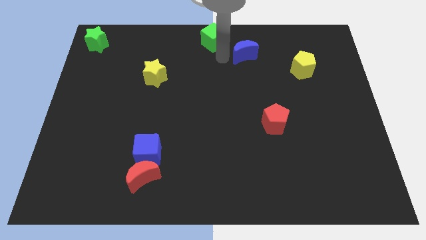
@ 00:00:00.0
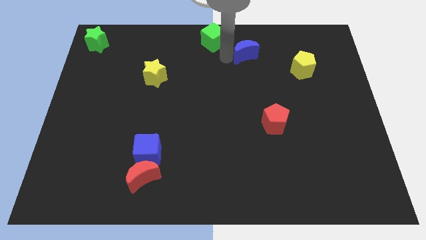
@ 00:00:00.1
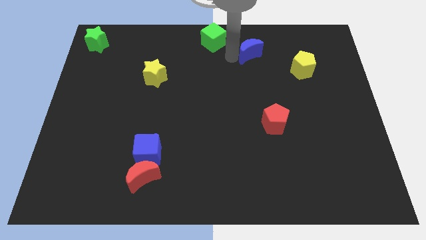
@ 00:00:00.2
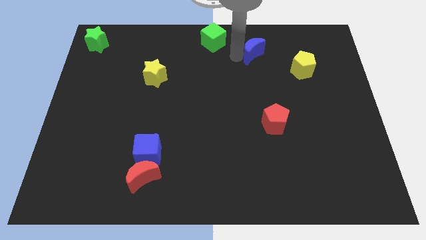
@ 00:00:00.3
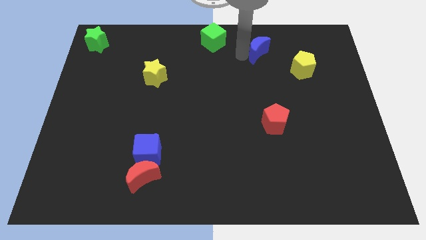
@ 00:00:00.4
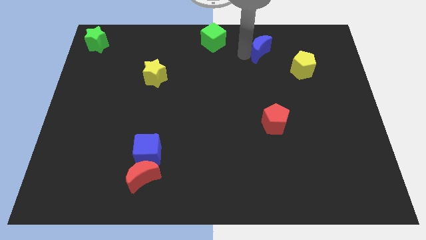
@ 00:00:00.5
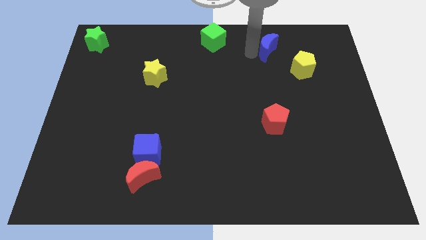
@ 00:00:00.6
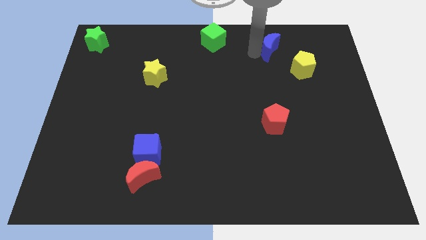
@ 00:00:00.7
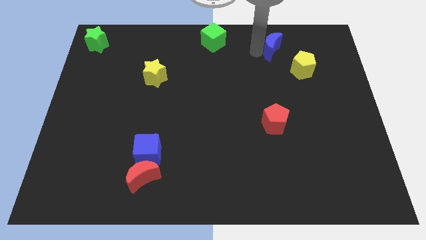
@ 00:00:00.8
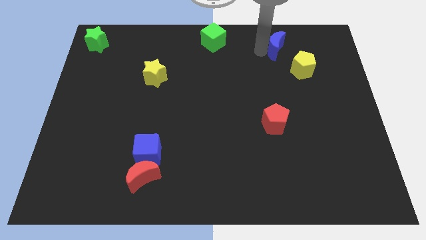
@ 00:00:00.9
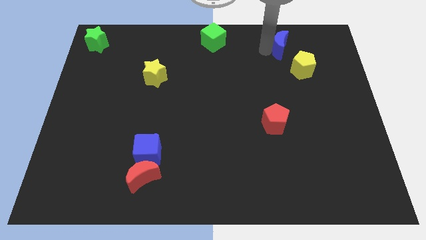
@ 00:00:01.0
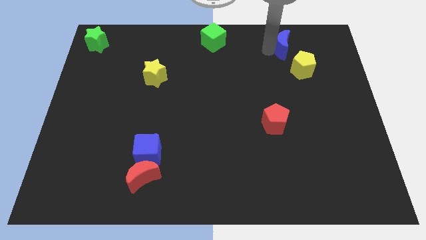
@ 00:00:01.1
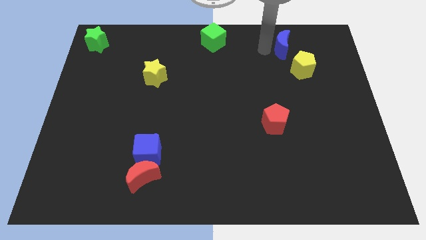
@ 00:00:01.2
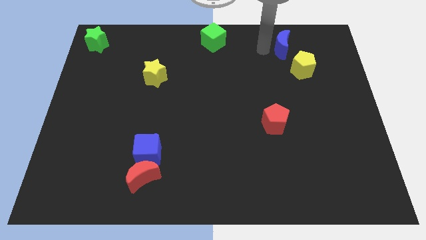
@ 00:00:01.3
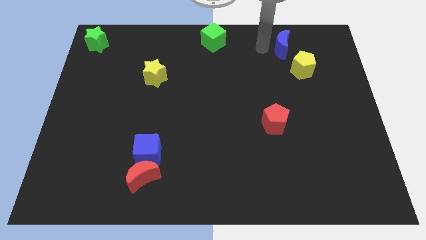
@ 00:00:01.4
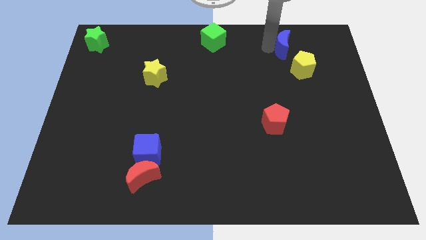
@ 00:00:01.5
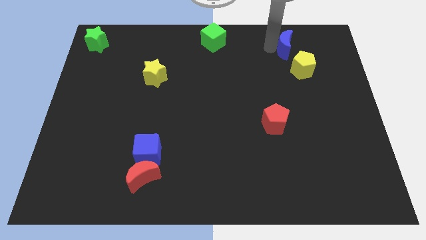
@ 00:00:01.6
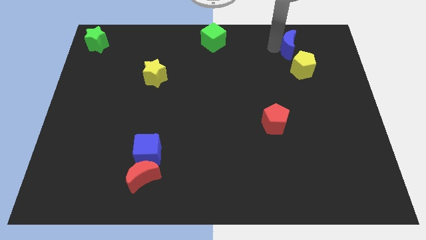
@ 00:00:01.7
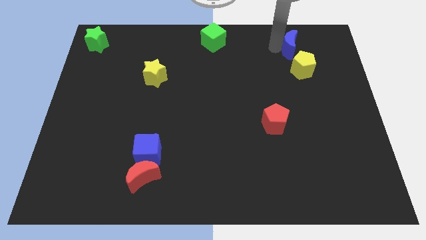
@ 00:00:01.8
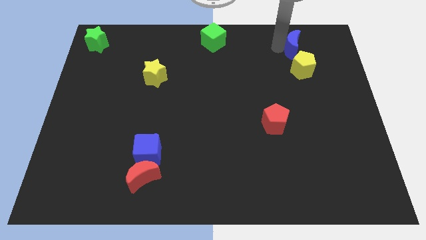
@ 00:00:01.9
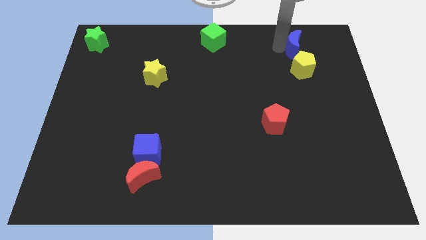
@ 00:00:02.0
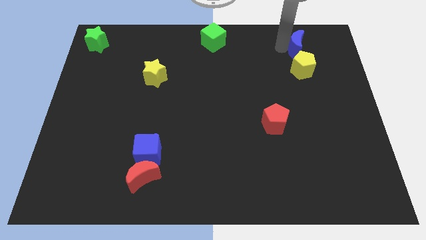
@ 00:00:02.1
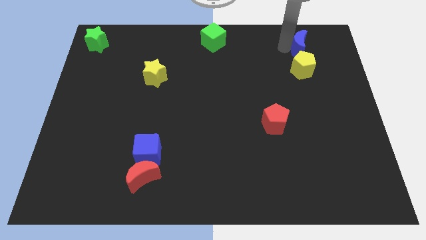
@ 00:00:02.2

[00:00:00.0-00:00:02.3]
slide the blue moon on the top of yellow pentagon

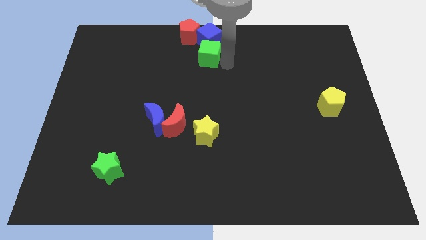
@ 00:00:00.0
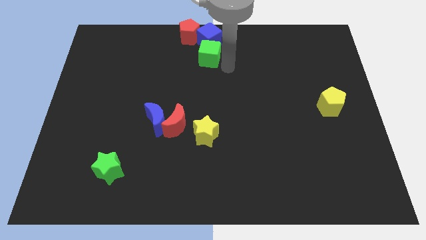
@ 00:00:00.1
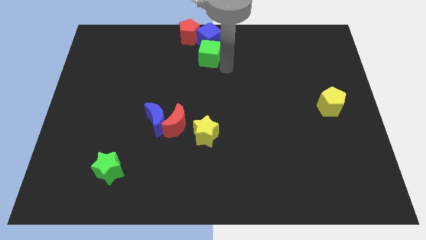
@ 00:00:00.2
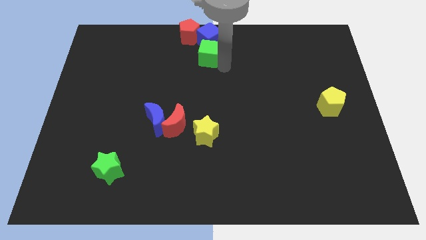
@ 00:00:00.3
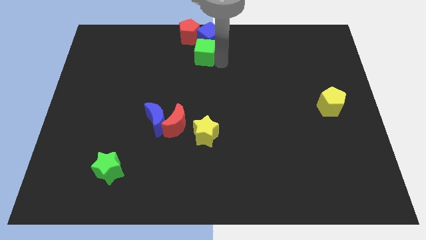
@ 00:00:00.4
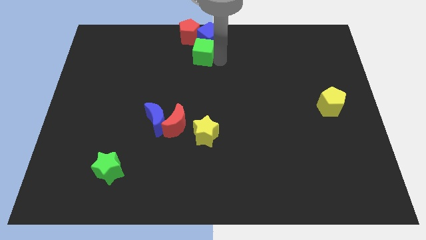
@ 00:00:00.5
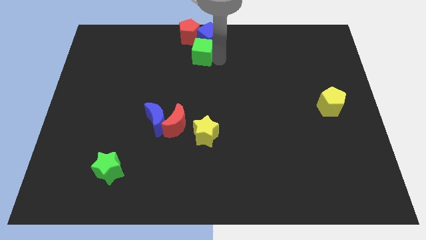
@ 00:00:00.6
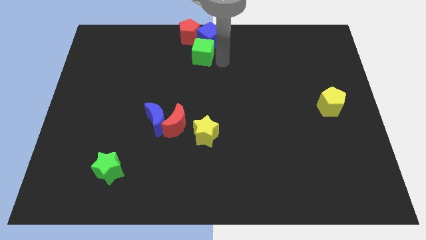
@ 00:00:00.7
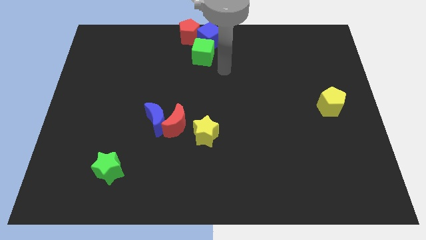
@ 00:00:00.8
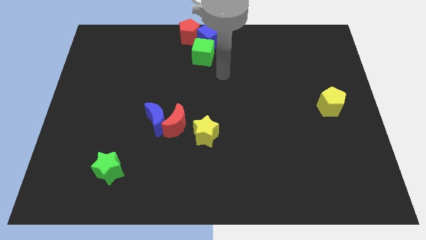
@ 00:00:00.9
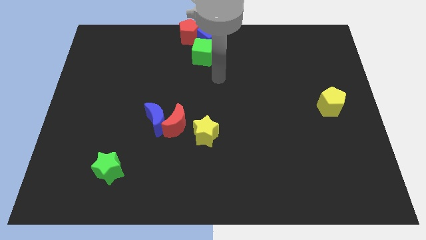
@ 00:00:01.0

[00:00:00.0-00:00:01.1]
adjust green cube below blue cube

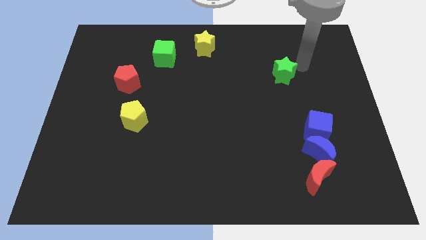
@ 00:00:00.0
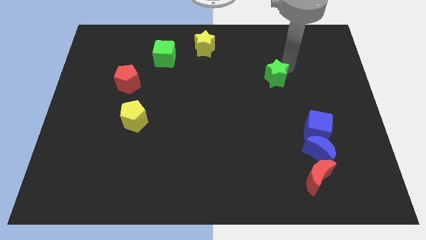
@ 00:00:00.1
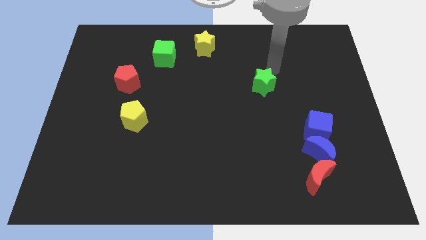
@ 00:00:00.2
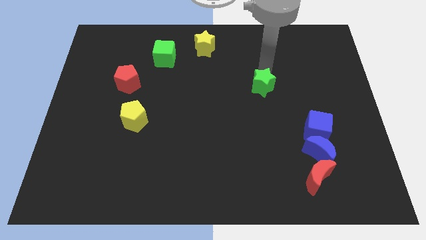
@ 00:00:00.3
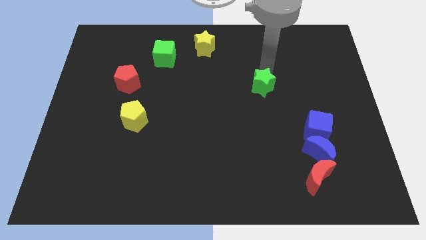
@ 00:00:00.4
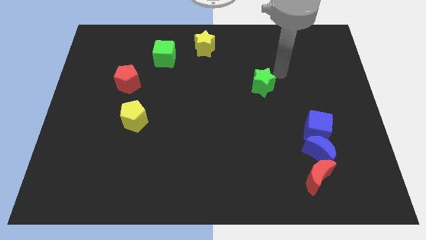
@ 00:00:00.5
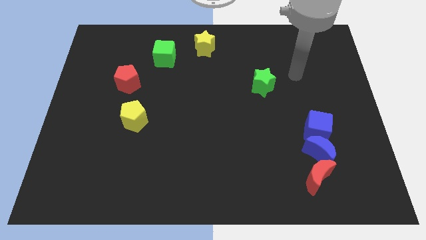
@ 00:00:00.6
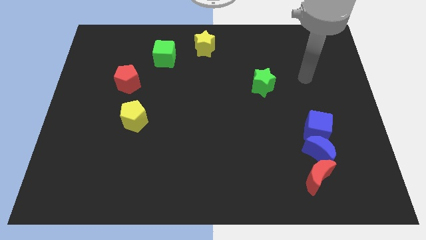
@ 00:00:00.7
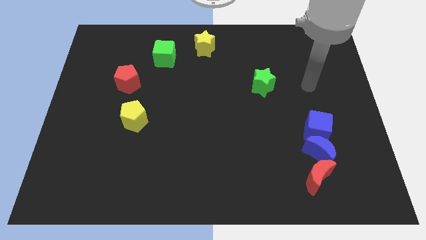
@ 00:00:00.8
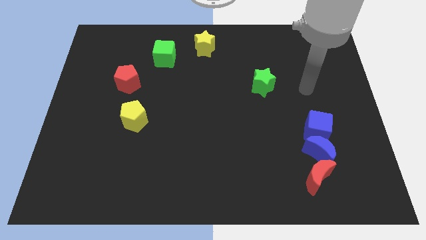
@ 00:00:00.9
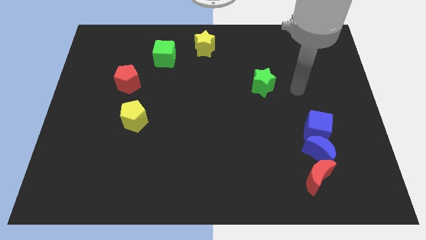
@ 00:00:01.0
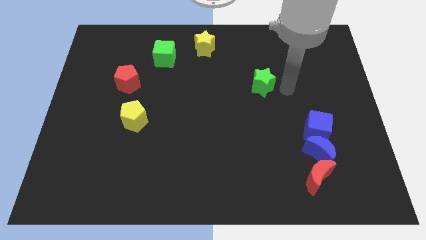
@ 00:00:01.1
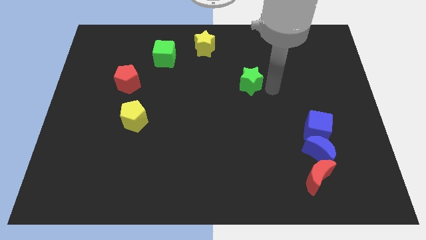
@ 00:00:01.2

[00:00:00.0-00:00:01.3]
place the green star diagonally top right to yellow pentagon

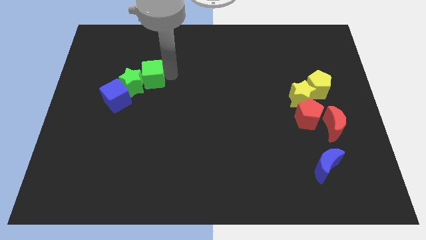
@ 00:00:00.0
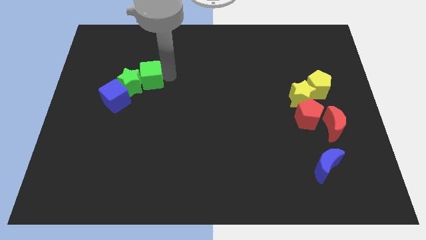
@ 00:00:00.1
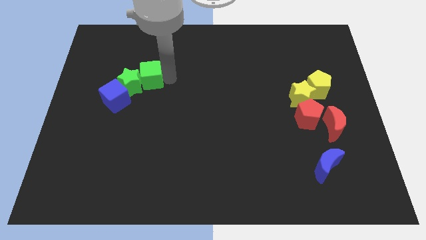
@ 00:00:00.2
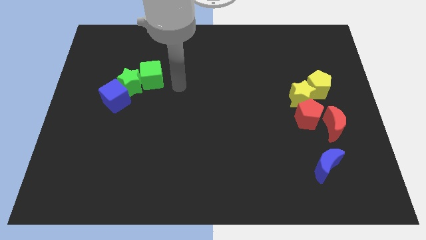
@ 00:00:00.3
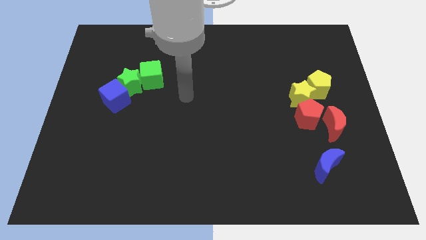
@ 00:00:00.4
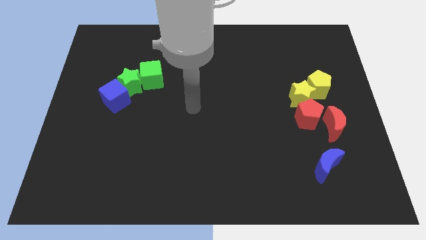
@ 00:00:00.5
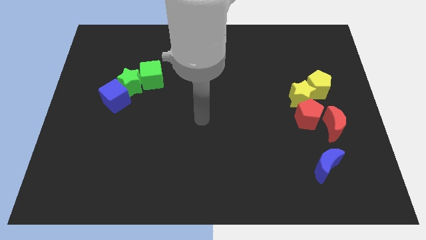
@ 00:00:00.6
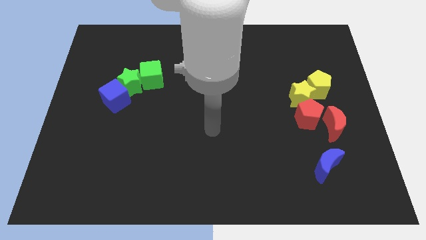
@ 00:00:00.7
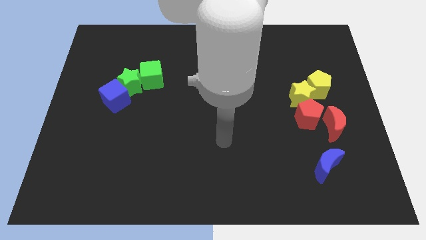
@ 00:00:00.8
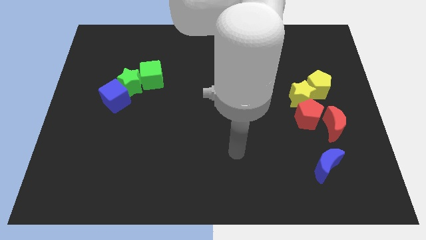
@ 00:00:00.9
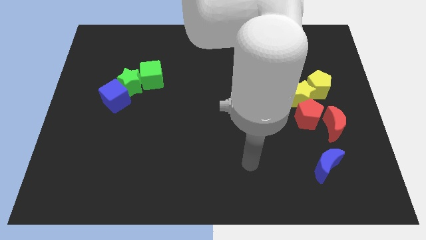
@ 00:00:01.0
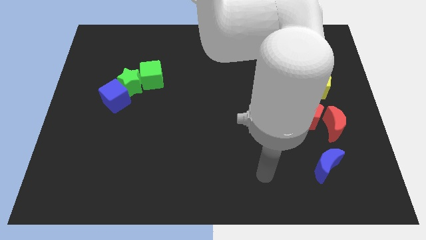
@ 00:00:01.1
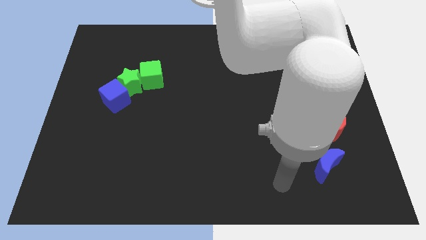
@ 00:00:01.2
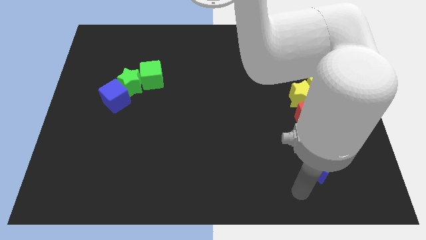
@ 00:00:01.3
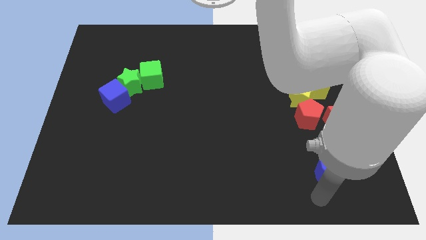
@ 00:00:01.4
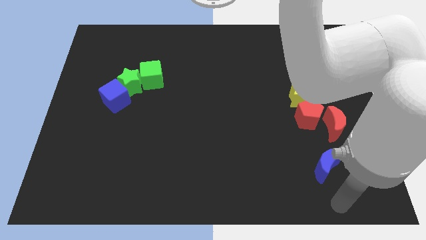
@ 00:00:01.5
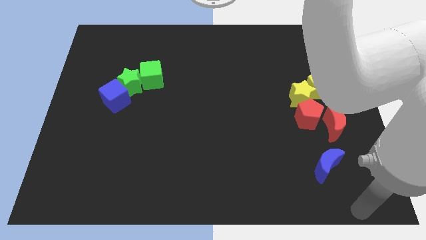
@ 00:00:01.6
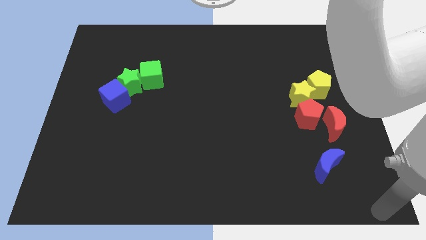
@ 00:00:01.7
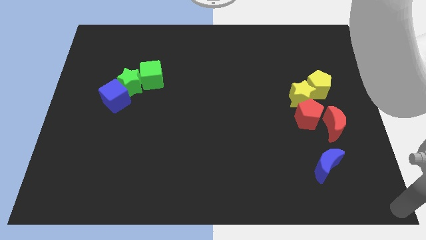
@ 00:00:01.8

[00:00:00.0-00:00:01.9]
move the arm away from the green cube

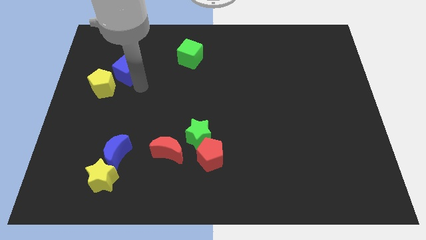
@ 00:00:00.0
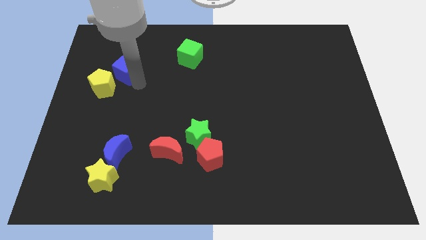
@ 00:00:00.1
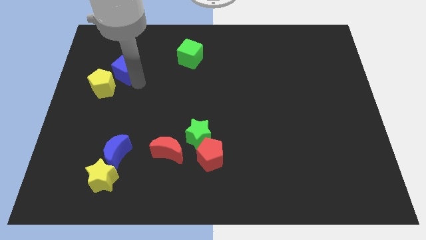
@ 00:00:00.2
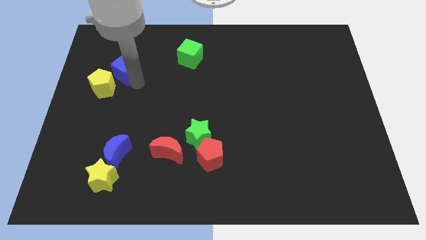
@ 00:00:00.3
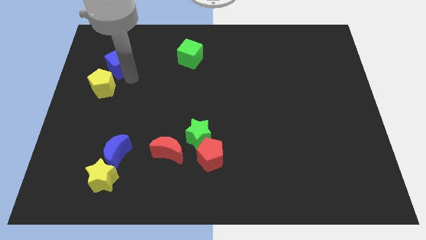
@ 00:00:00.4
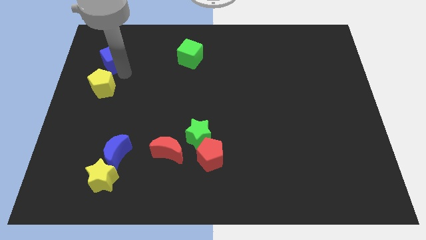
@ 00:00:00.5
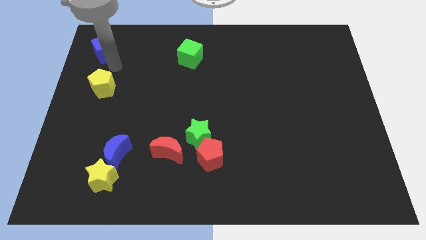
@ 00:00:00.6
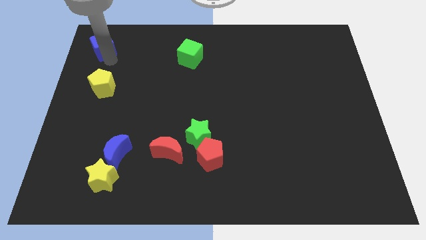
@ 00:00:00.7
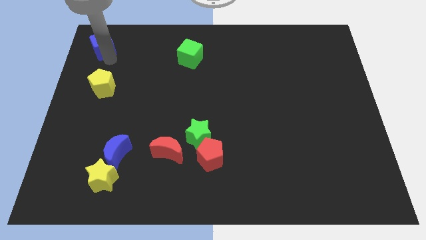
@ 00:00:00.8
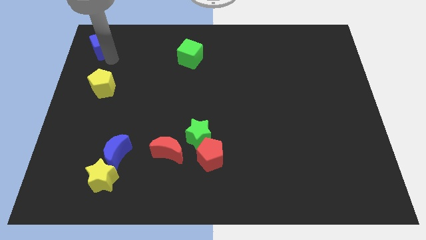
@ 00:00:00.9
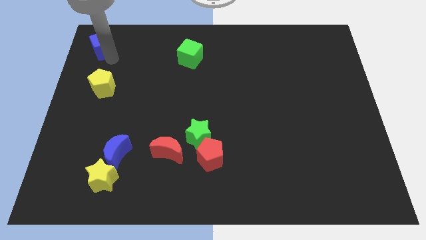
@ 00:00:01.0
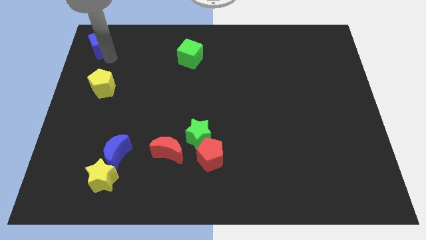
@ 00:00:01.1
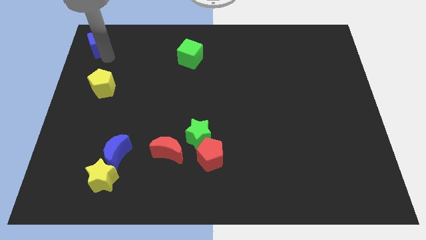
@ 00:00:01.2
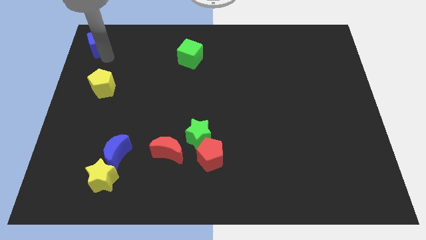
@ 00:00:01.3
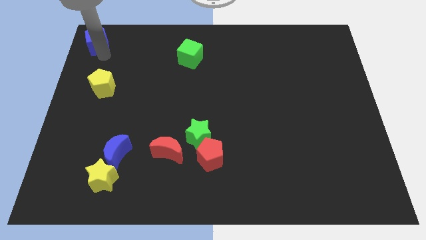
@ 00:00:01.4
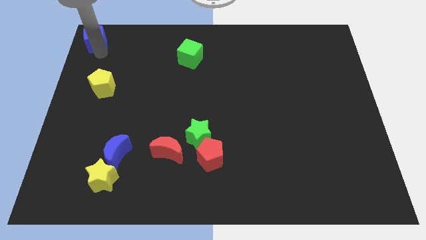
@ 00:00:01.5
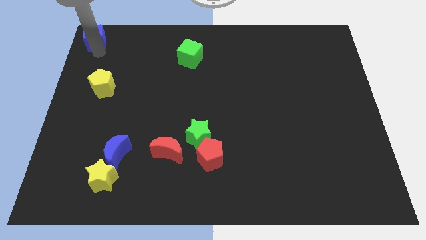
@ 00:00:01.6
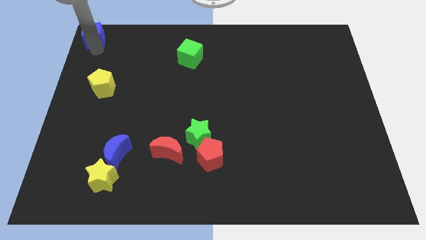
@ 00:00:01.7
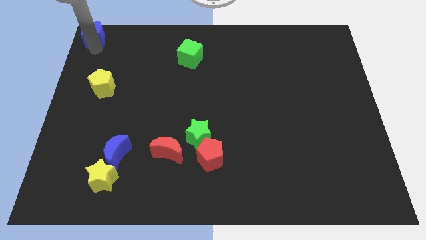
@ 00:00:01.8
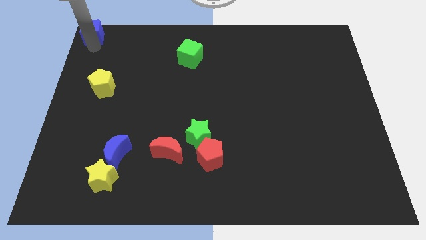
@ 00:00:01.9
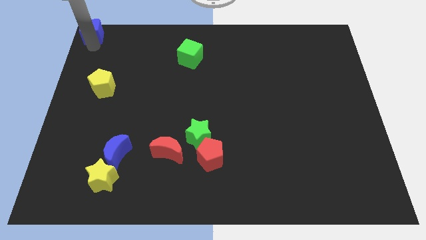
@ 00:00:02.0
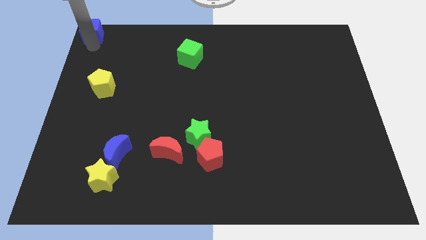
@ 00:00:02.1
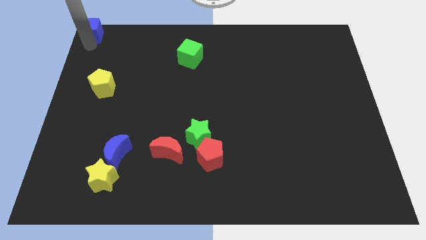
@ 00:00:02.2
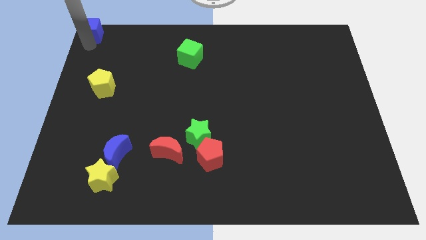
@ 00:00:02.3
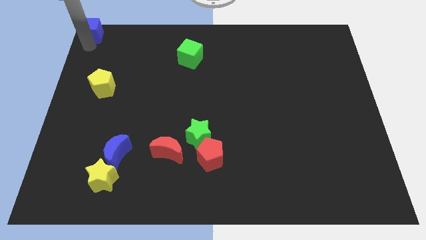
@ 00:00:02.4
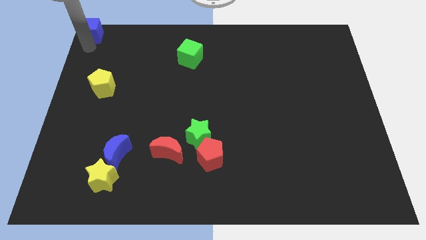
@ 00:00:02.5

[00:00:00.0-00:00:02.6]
place the blue cube at the top left corner of the board
